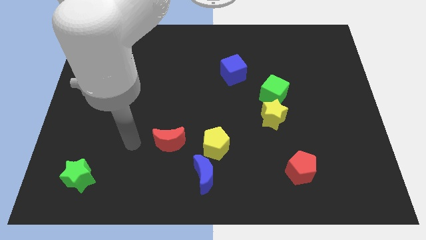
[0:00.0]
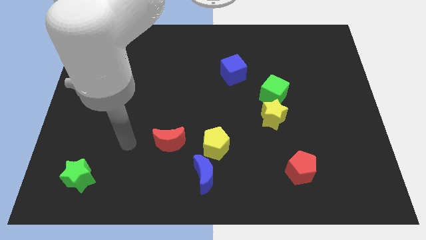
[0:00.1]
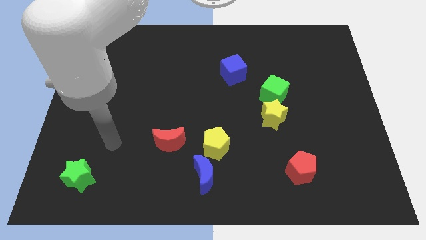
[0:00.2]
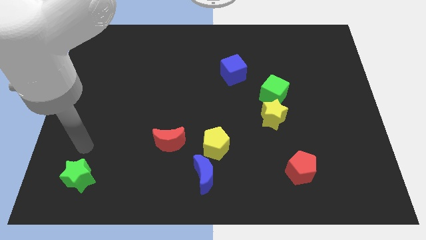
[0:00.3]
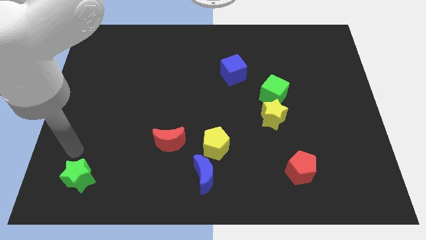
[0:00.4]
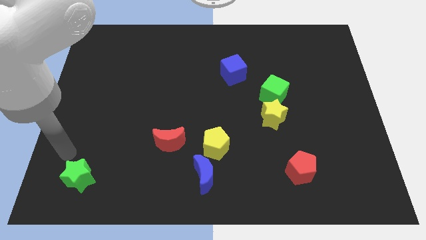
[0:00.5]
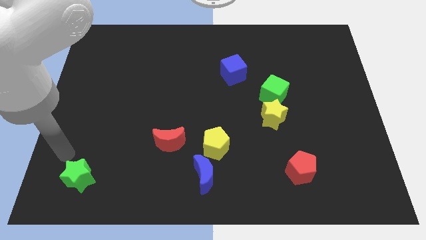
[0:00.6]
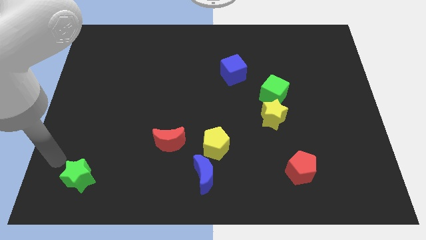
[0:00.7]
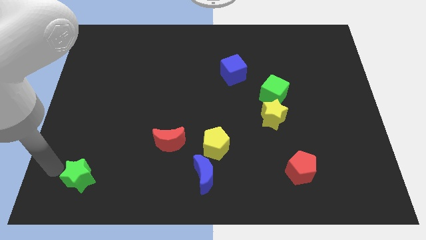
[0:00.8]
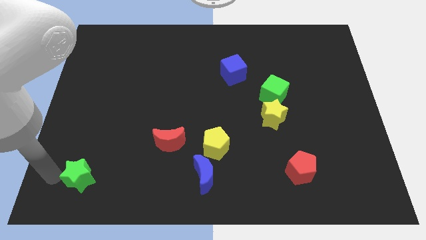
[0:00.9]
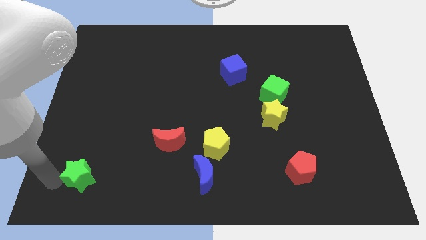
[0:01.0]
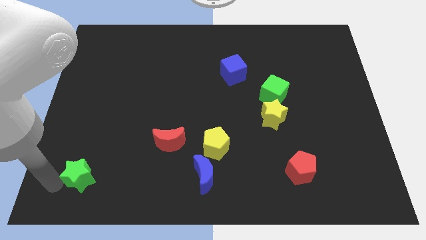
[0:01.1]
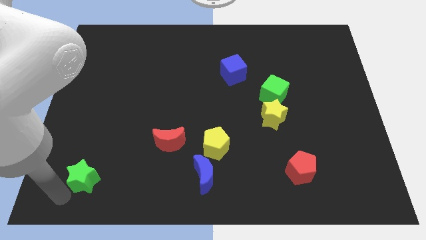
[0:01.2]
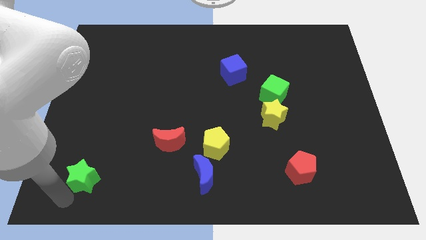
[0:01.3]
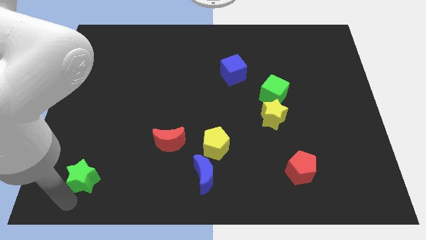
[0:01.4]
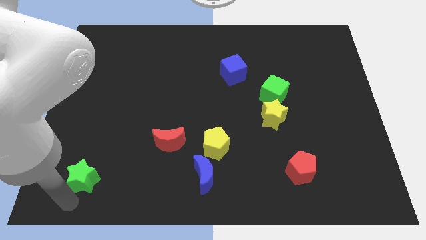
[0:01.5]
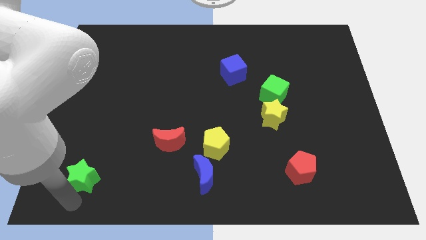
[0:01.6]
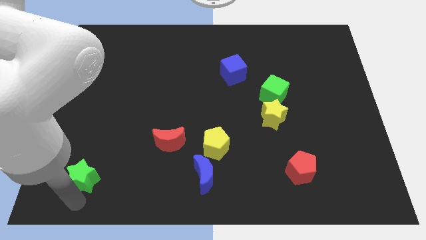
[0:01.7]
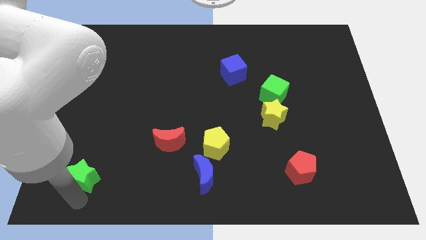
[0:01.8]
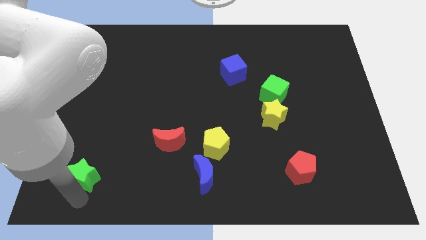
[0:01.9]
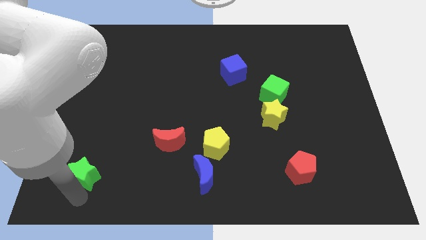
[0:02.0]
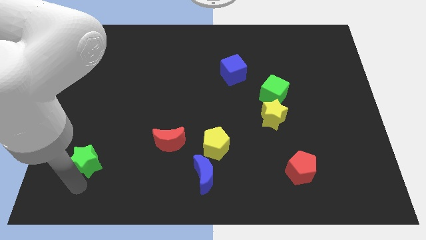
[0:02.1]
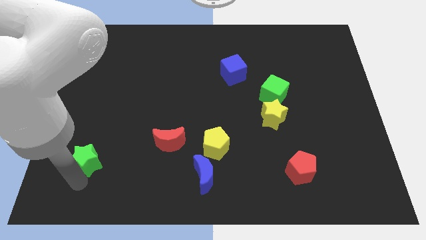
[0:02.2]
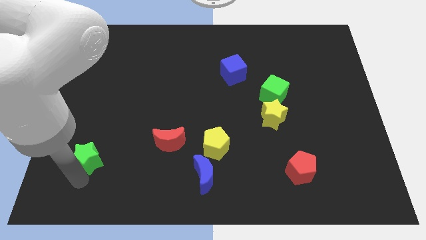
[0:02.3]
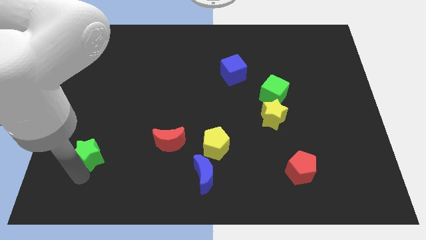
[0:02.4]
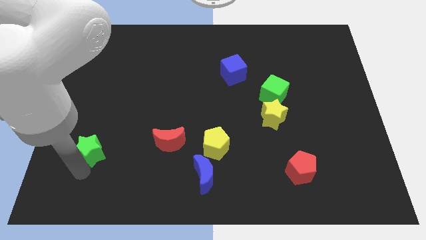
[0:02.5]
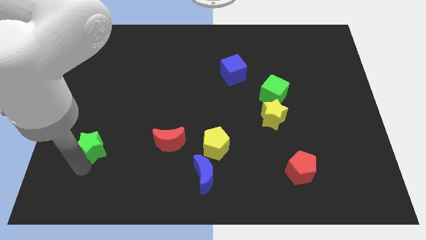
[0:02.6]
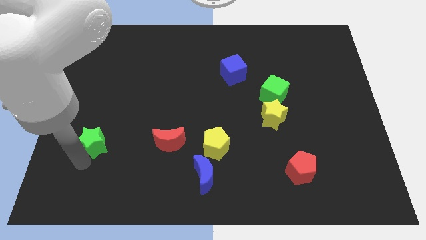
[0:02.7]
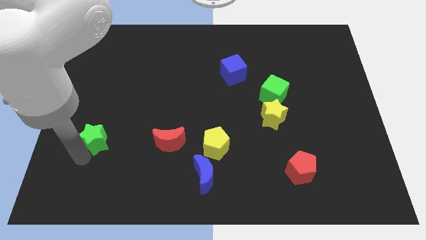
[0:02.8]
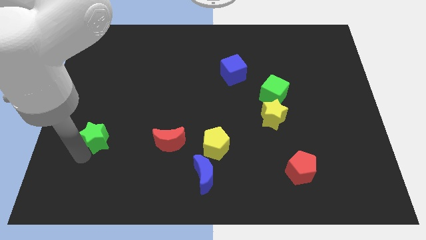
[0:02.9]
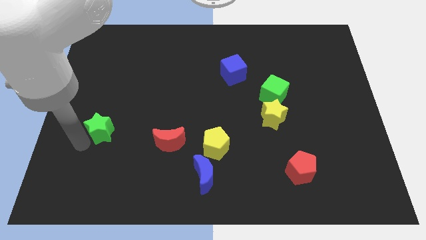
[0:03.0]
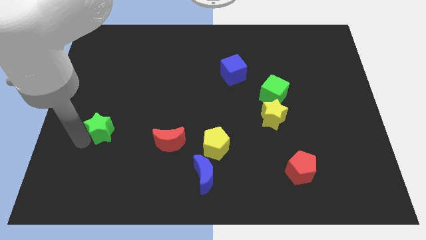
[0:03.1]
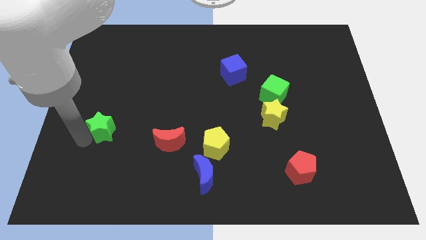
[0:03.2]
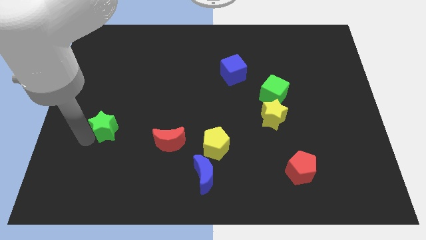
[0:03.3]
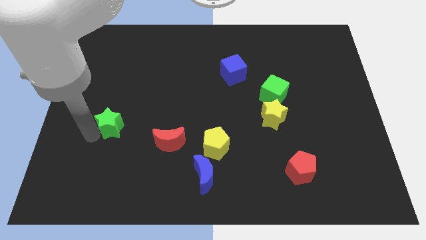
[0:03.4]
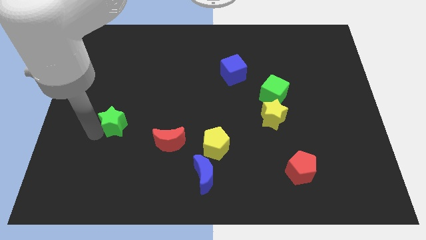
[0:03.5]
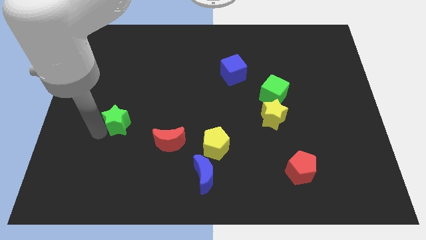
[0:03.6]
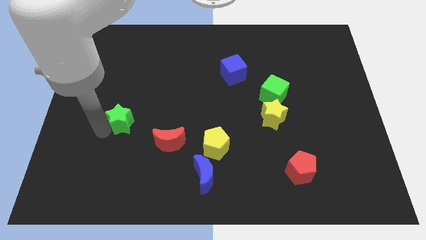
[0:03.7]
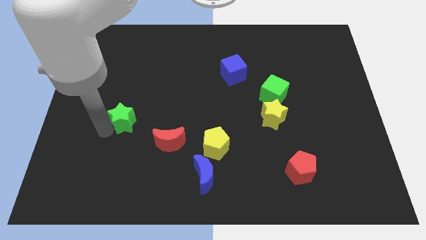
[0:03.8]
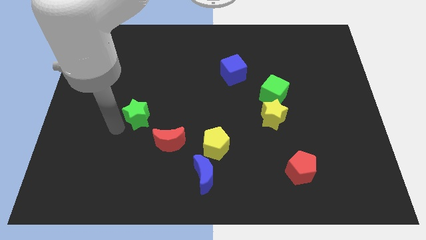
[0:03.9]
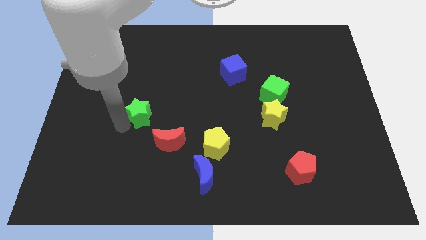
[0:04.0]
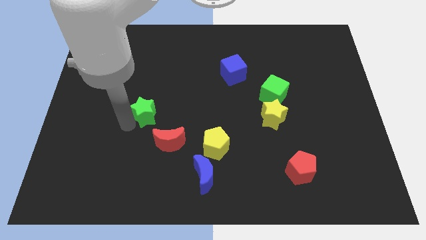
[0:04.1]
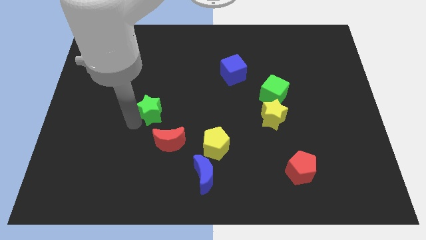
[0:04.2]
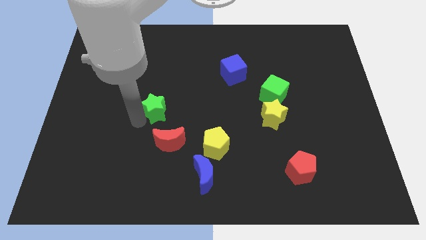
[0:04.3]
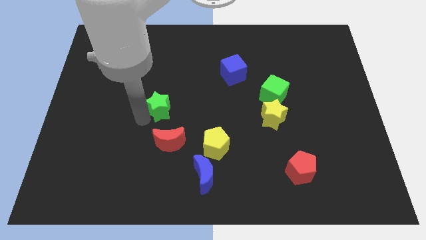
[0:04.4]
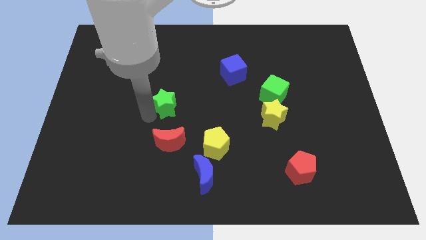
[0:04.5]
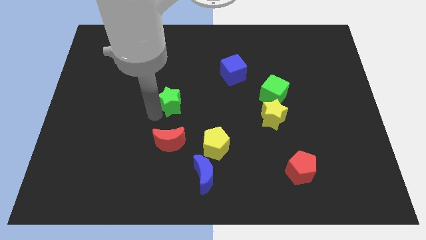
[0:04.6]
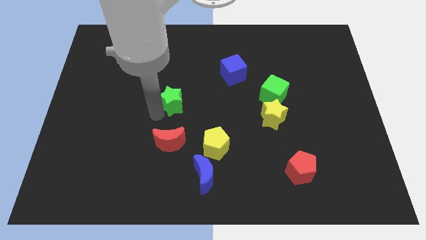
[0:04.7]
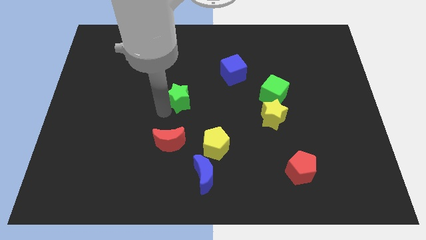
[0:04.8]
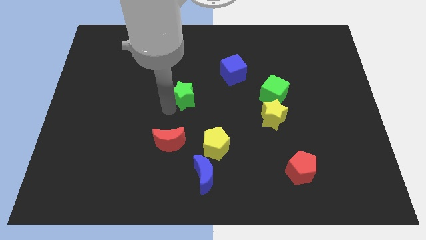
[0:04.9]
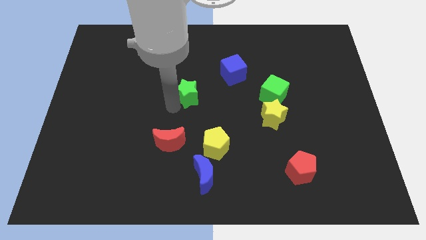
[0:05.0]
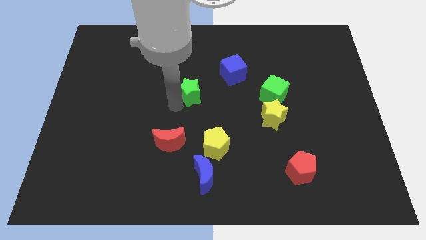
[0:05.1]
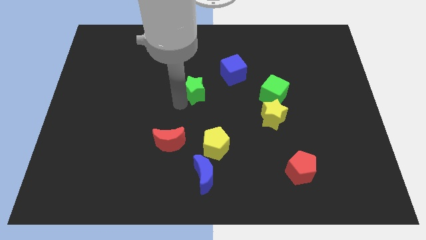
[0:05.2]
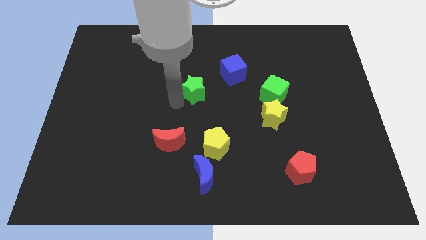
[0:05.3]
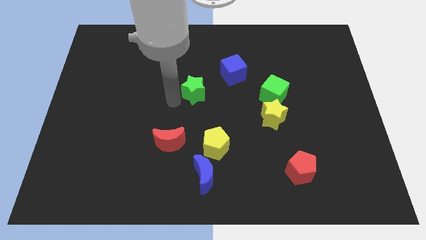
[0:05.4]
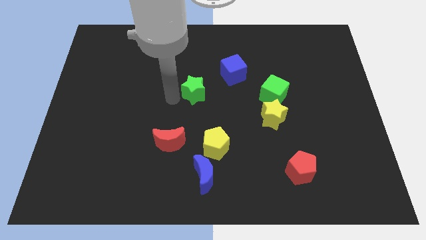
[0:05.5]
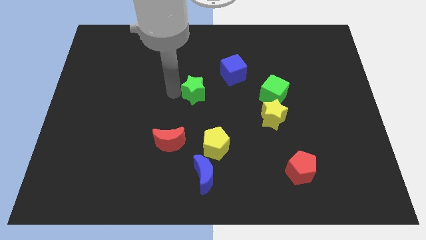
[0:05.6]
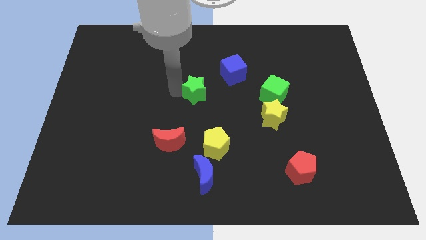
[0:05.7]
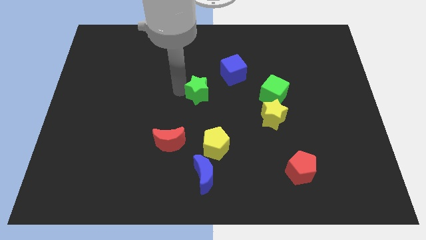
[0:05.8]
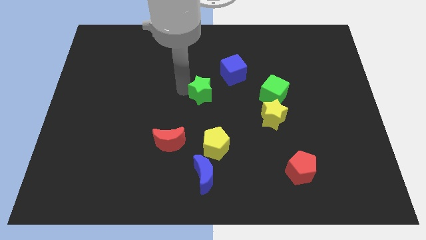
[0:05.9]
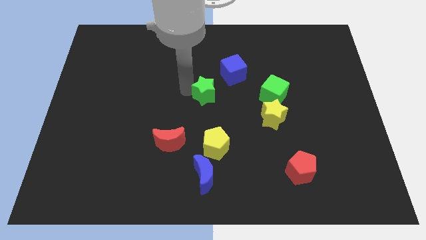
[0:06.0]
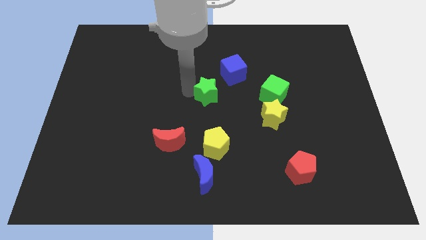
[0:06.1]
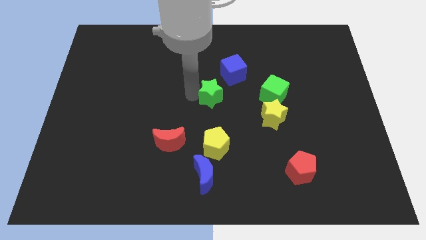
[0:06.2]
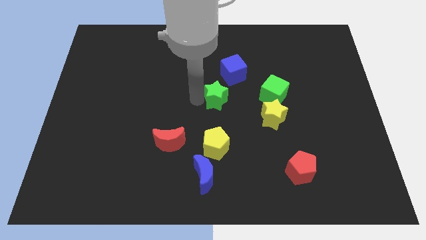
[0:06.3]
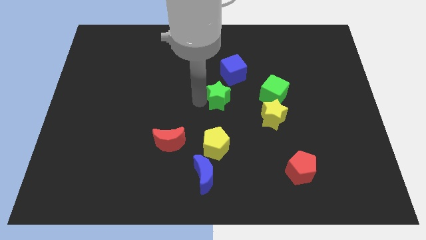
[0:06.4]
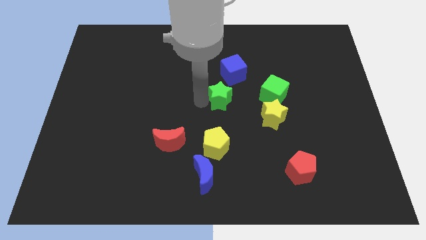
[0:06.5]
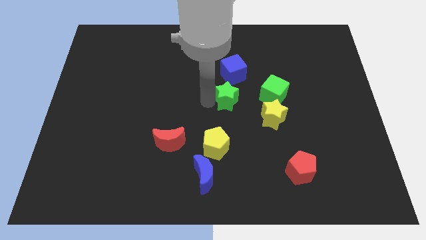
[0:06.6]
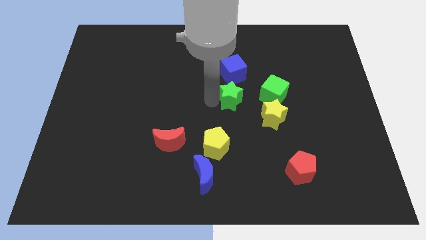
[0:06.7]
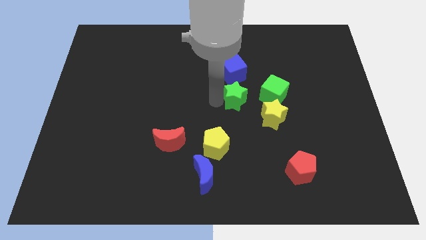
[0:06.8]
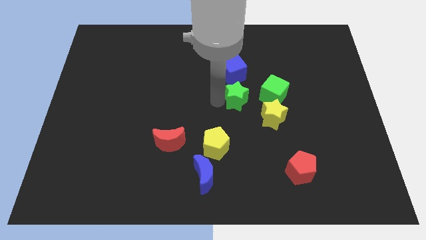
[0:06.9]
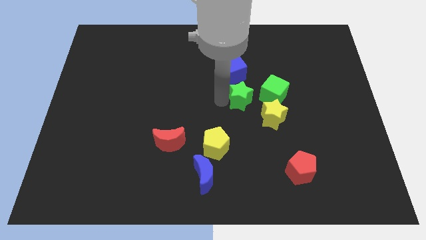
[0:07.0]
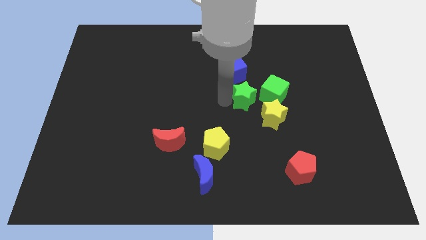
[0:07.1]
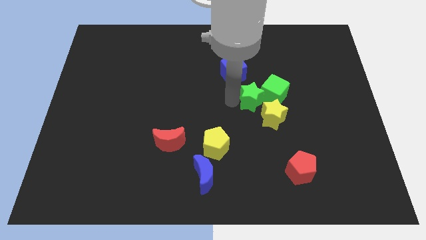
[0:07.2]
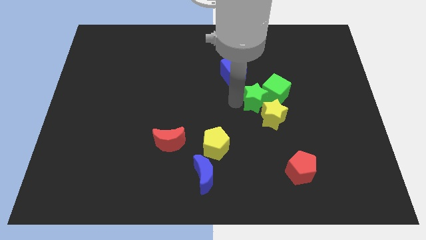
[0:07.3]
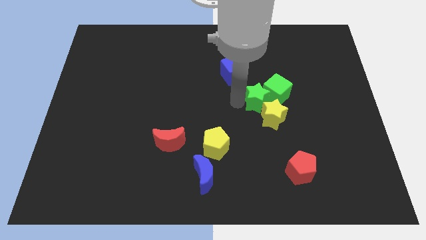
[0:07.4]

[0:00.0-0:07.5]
put the green star towards the green cube

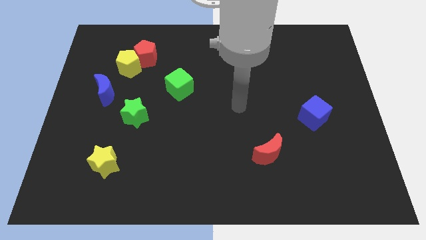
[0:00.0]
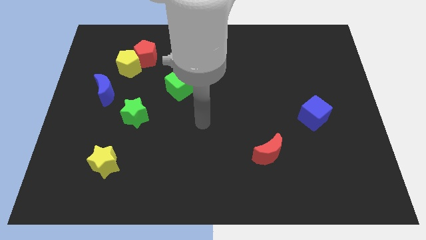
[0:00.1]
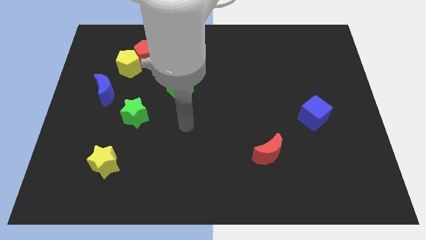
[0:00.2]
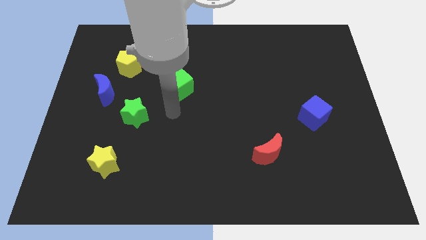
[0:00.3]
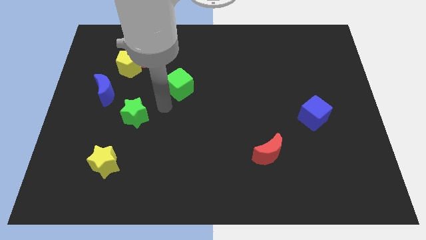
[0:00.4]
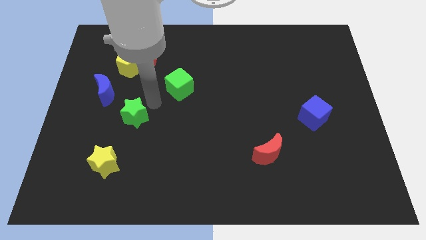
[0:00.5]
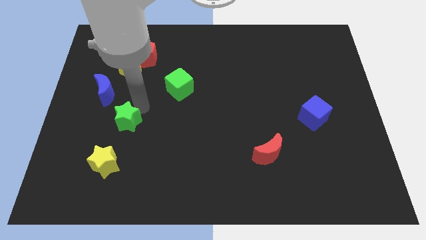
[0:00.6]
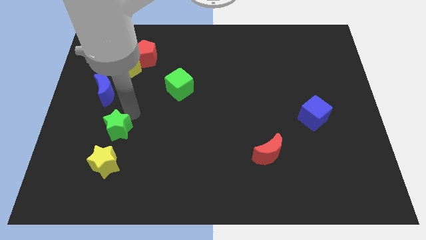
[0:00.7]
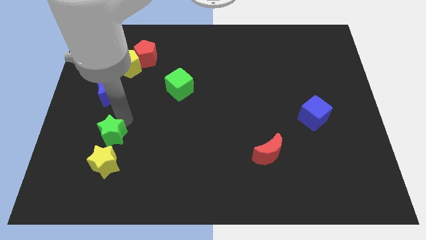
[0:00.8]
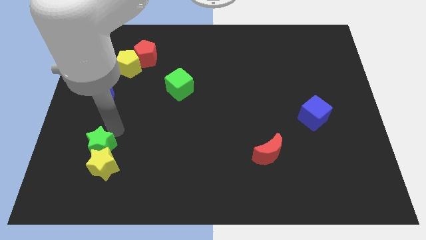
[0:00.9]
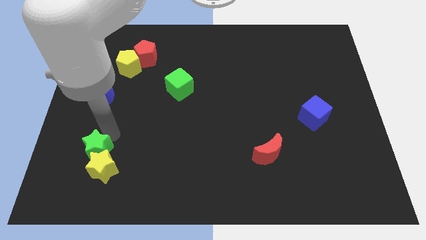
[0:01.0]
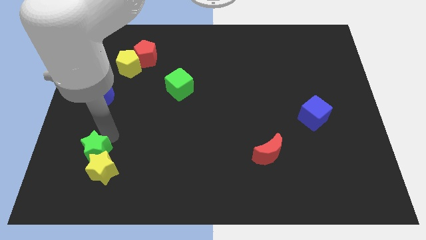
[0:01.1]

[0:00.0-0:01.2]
push the green star to the yellow star
